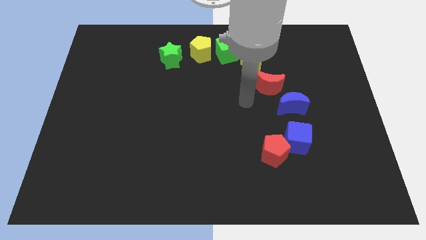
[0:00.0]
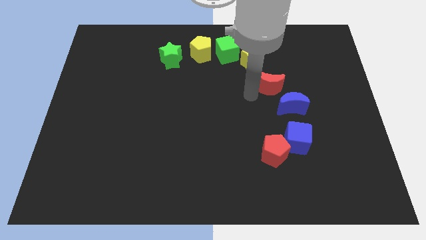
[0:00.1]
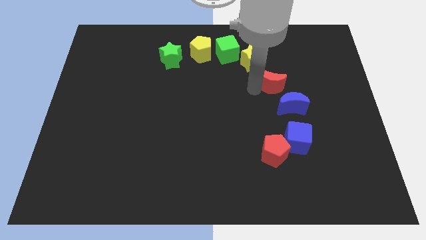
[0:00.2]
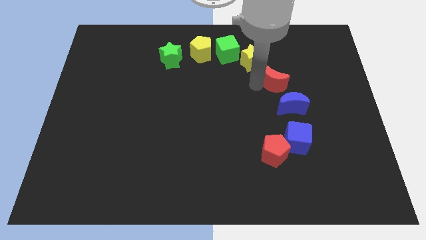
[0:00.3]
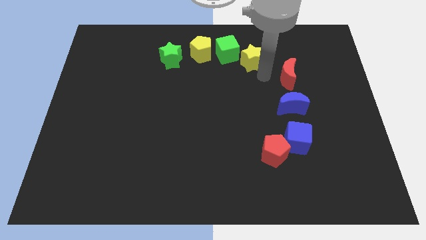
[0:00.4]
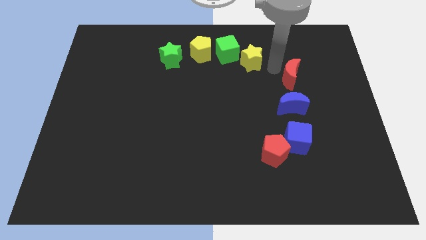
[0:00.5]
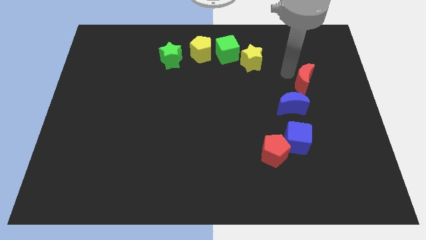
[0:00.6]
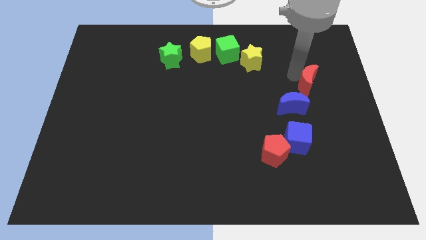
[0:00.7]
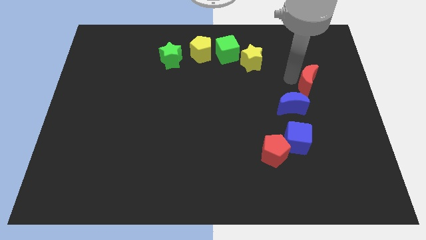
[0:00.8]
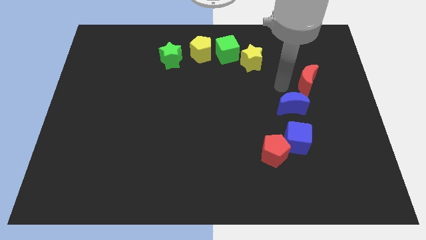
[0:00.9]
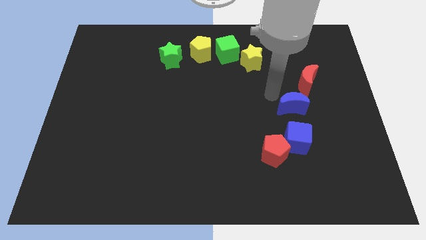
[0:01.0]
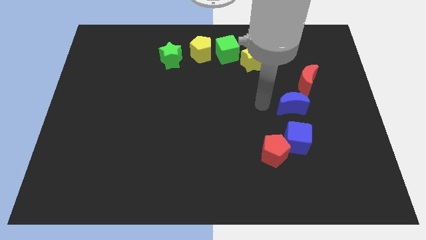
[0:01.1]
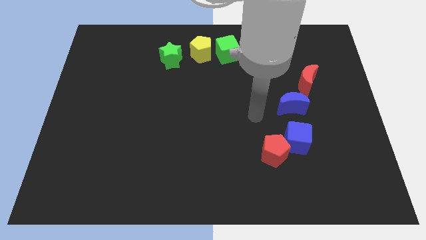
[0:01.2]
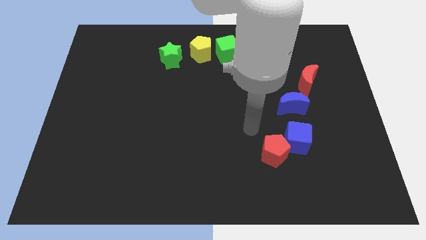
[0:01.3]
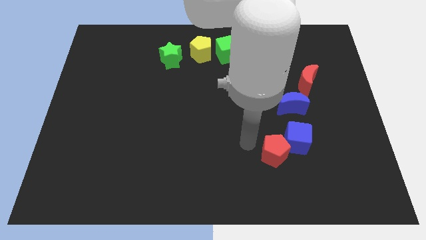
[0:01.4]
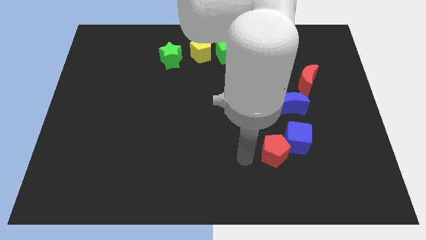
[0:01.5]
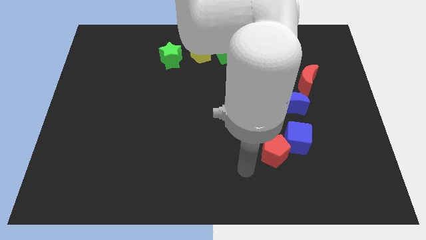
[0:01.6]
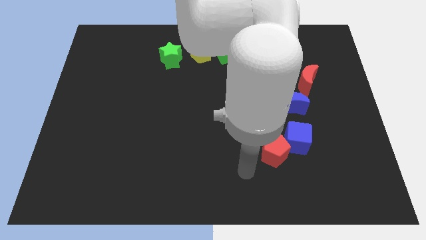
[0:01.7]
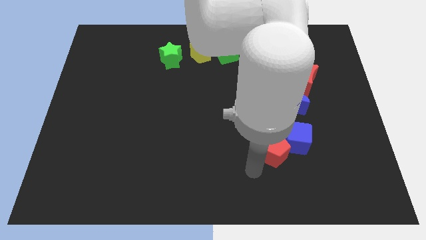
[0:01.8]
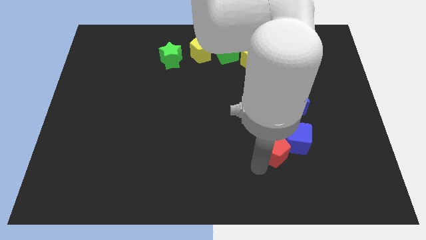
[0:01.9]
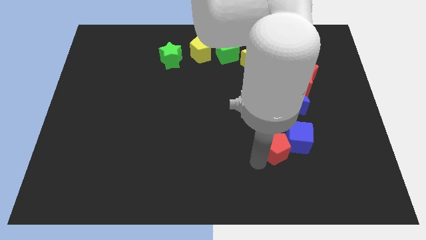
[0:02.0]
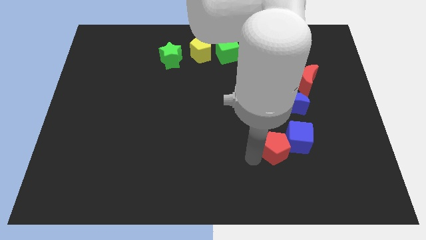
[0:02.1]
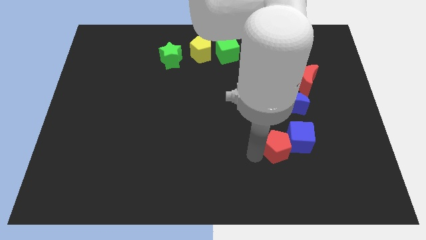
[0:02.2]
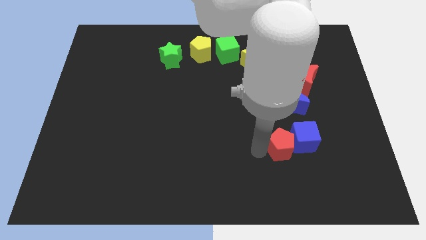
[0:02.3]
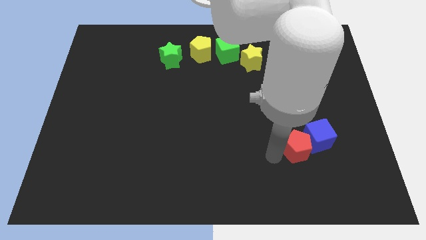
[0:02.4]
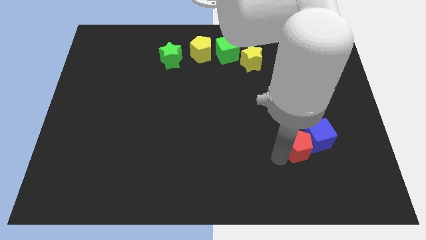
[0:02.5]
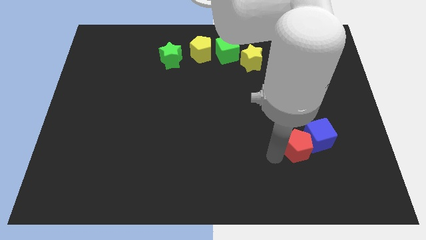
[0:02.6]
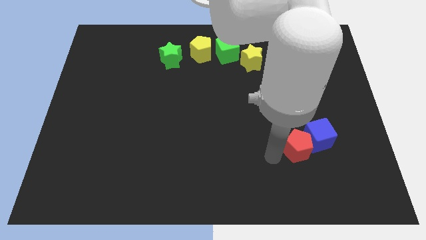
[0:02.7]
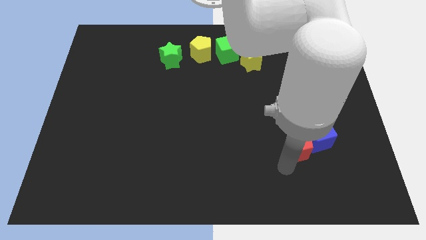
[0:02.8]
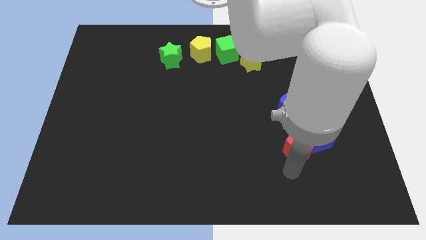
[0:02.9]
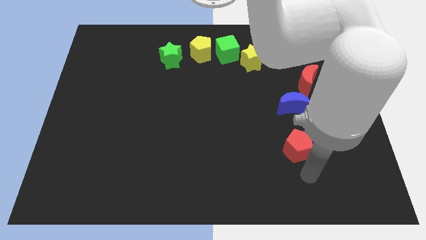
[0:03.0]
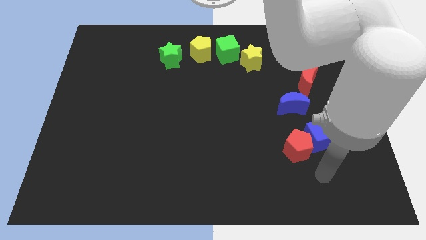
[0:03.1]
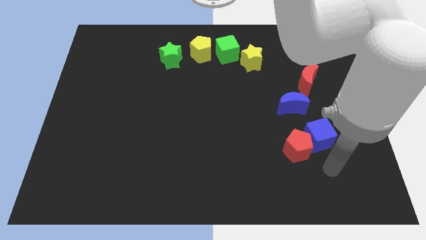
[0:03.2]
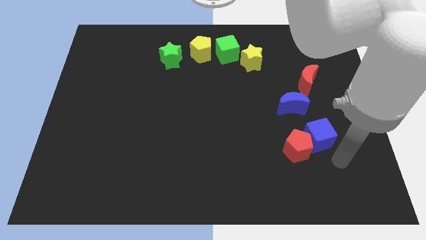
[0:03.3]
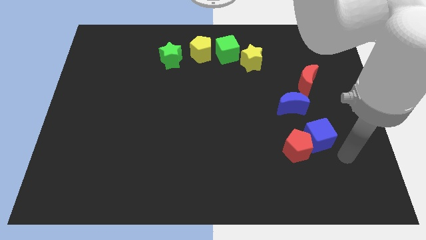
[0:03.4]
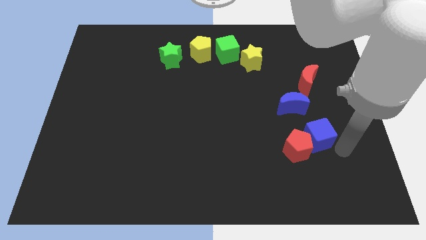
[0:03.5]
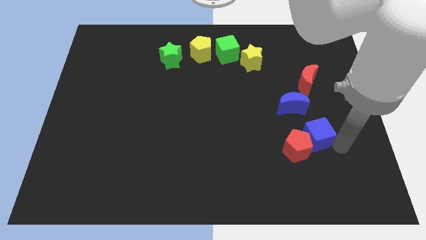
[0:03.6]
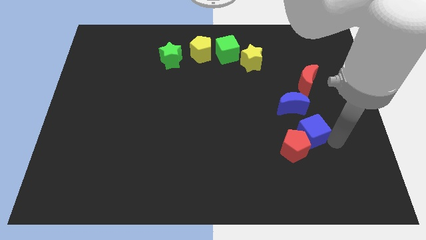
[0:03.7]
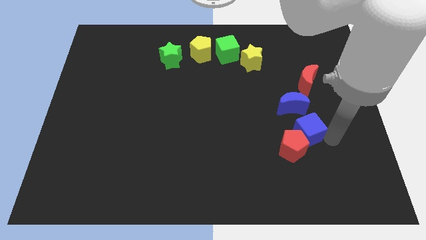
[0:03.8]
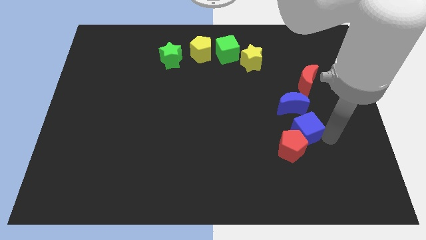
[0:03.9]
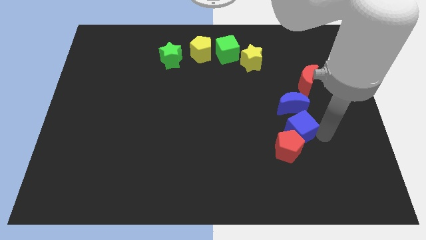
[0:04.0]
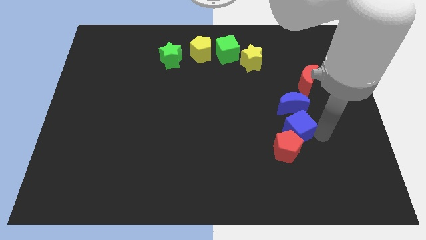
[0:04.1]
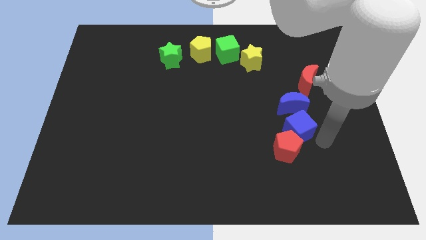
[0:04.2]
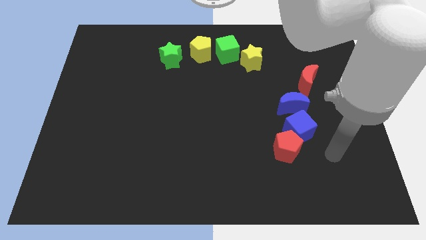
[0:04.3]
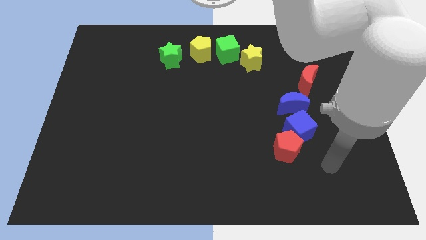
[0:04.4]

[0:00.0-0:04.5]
place the red and blue blocks in a vertical line

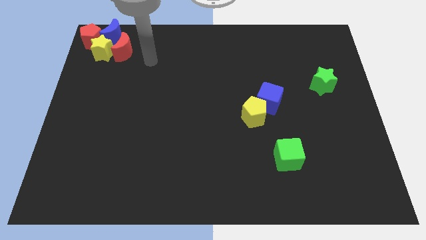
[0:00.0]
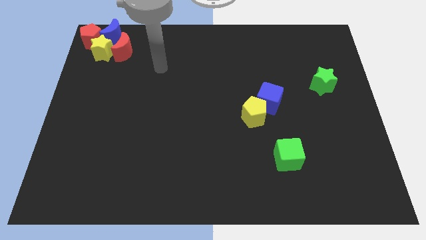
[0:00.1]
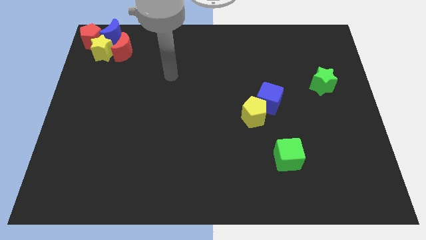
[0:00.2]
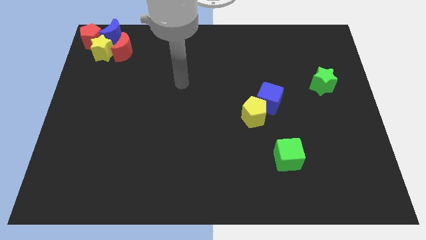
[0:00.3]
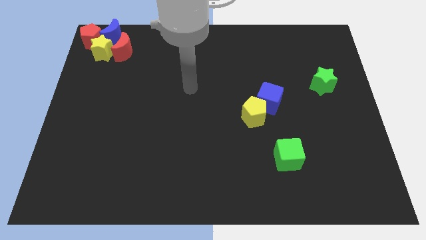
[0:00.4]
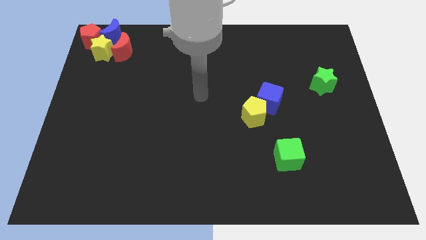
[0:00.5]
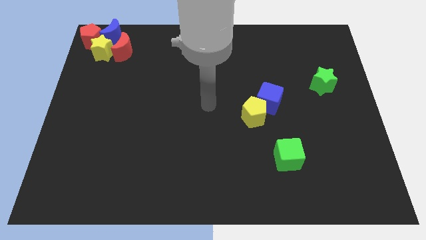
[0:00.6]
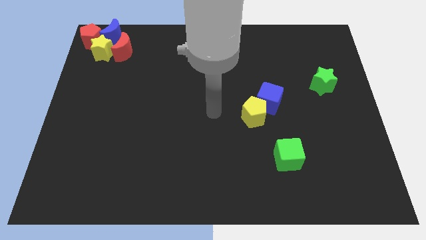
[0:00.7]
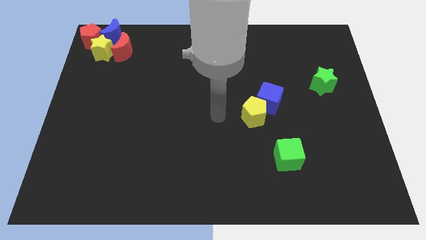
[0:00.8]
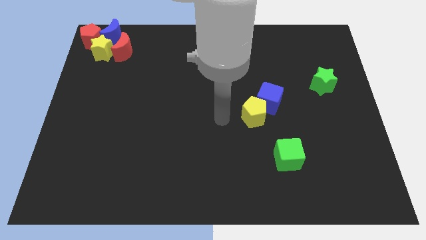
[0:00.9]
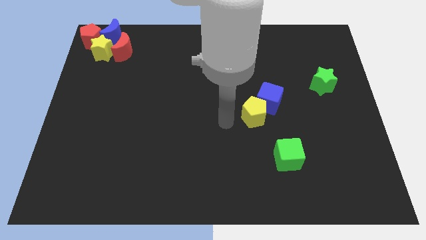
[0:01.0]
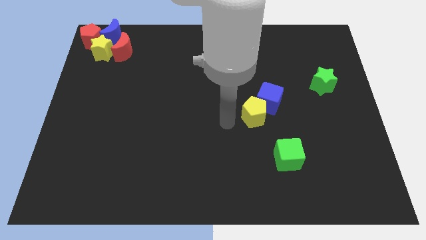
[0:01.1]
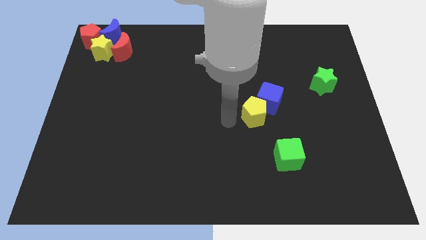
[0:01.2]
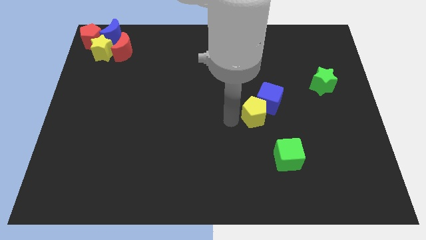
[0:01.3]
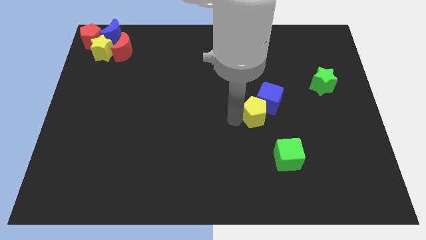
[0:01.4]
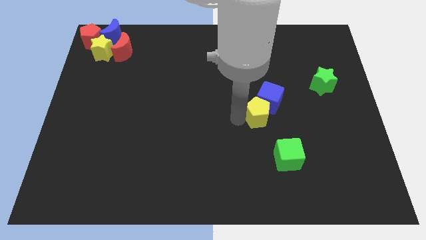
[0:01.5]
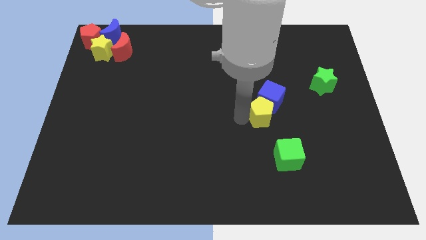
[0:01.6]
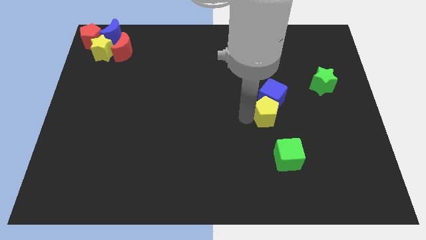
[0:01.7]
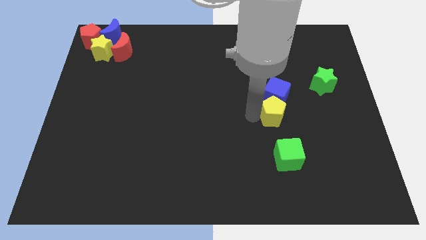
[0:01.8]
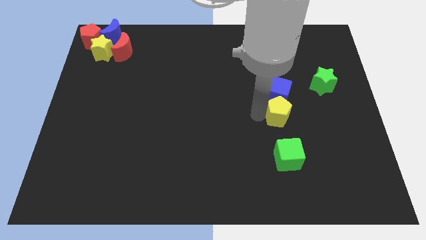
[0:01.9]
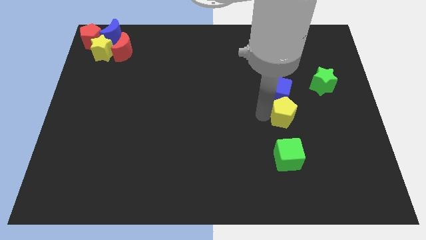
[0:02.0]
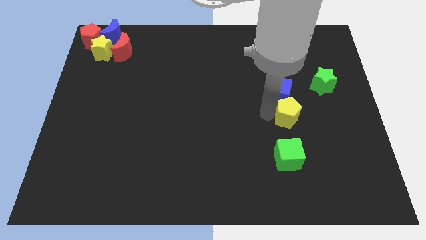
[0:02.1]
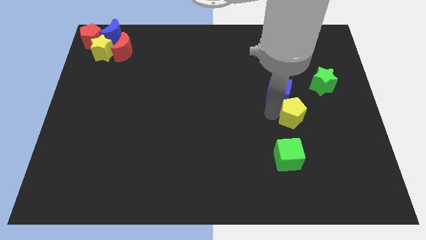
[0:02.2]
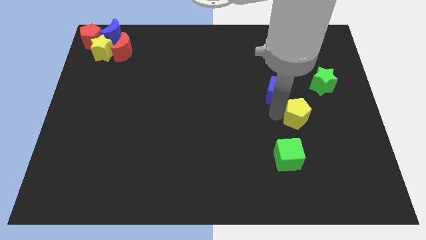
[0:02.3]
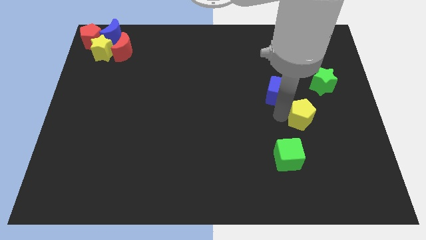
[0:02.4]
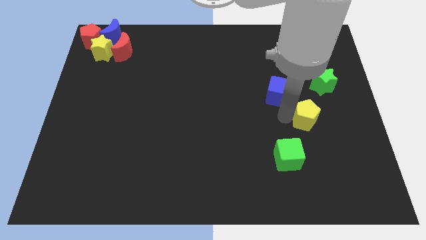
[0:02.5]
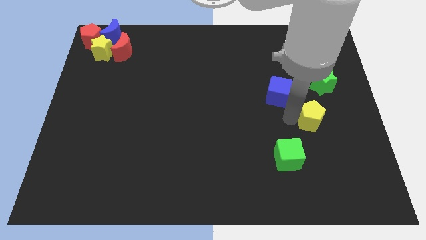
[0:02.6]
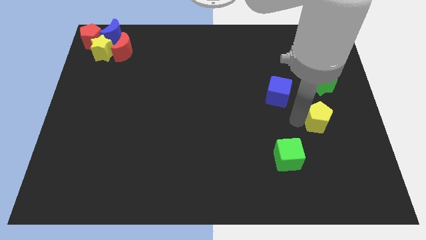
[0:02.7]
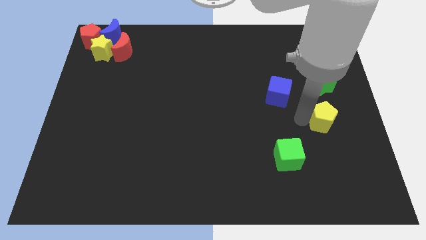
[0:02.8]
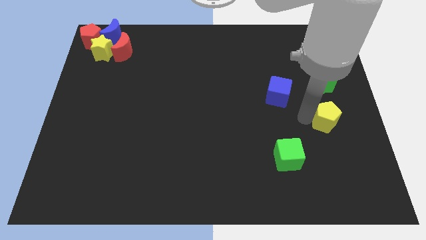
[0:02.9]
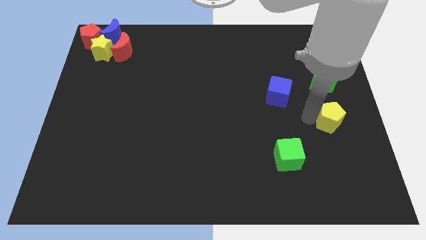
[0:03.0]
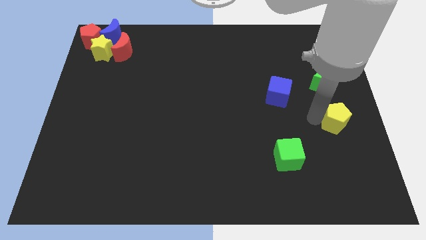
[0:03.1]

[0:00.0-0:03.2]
place yellow pentagon to the bottom of the green star

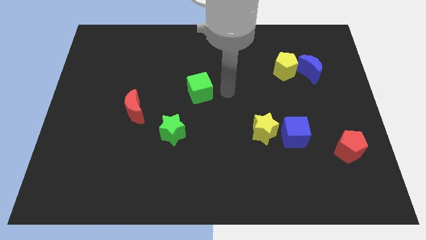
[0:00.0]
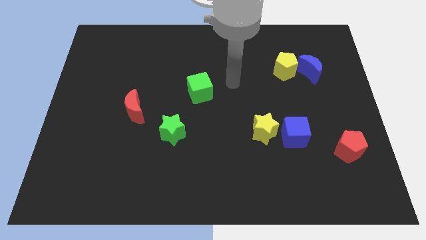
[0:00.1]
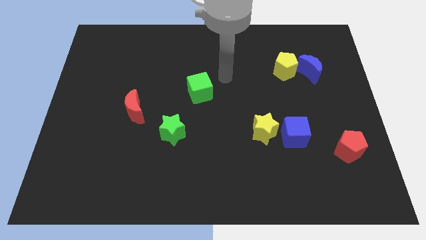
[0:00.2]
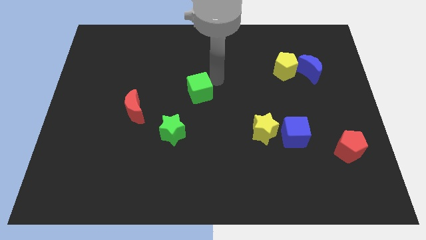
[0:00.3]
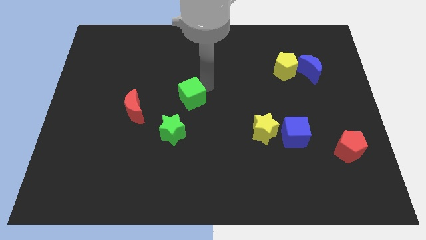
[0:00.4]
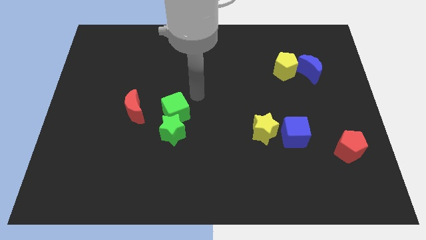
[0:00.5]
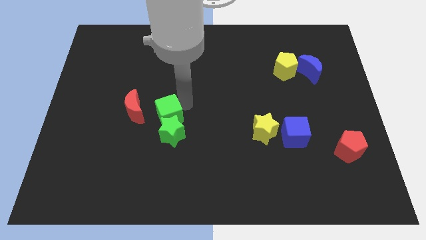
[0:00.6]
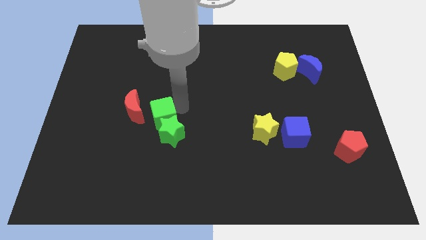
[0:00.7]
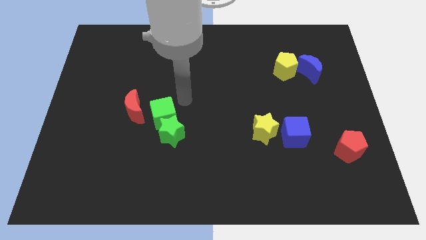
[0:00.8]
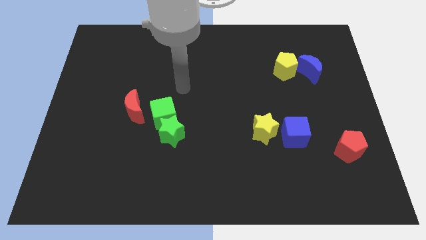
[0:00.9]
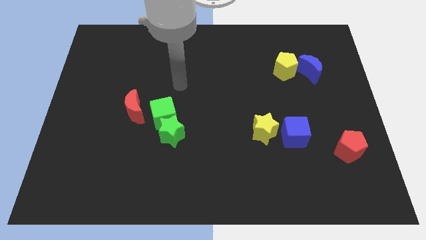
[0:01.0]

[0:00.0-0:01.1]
push the green cube into green star

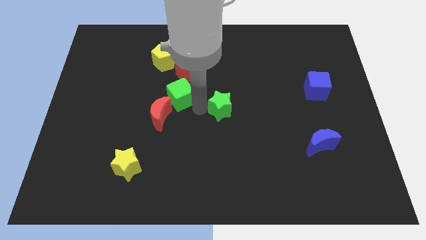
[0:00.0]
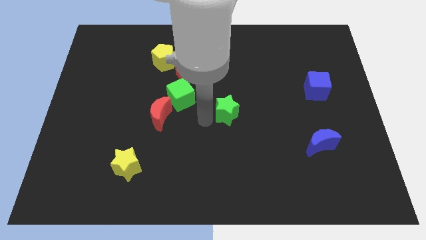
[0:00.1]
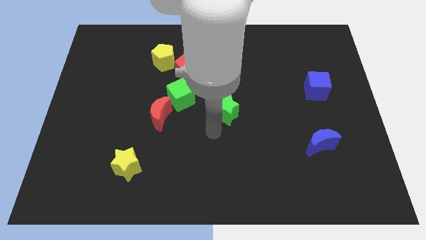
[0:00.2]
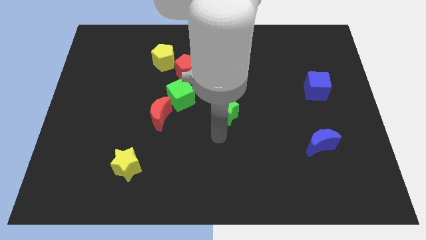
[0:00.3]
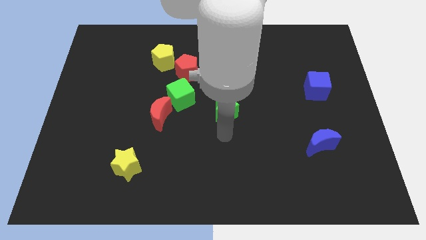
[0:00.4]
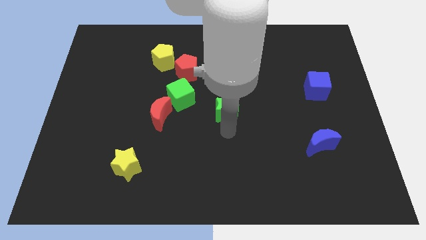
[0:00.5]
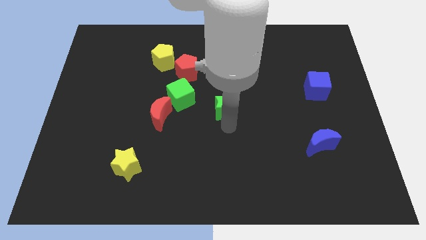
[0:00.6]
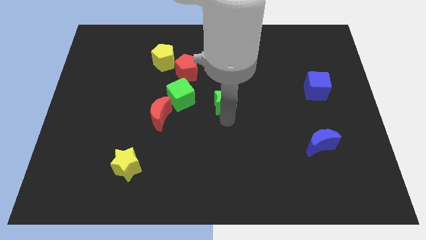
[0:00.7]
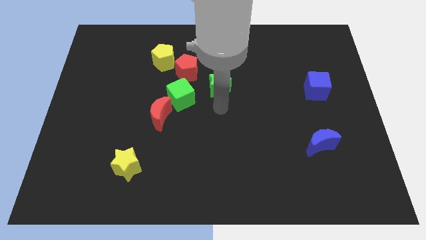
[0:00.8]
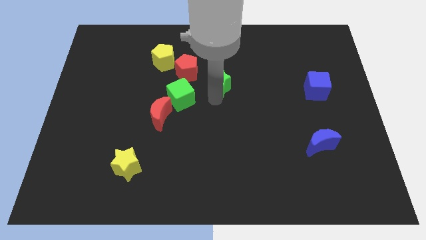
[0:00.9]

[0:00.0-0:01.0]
move green star up
